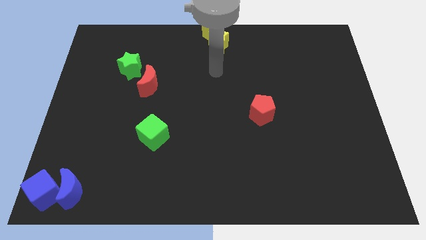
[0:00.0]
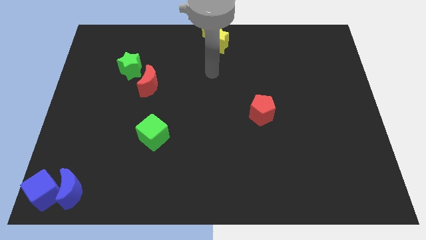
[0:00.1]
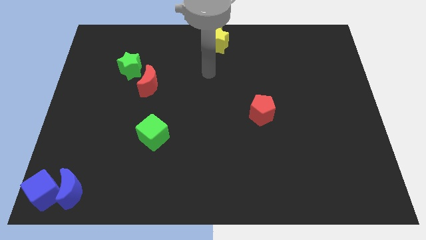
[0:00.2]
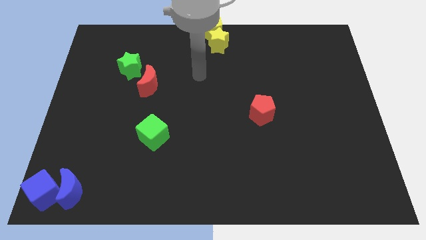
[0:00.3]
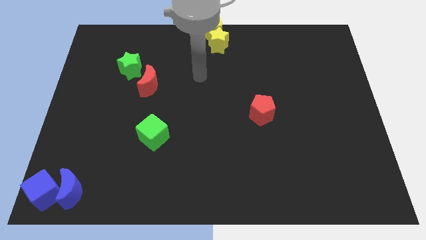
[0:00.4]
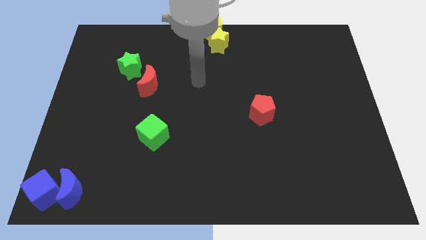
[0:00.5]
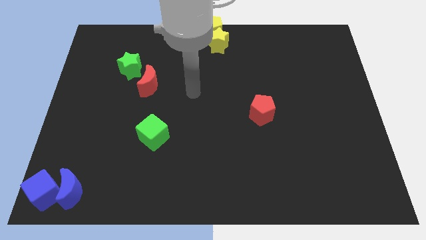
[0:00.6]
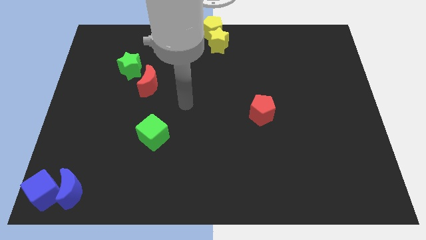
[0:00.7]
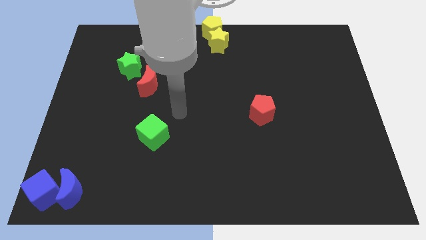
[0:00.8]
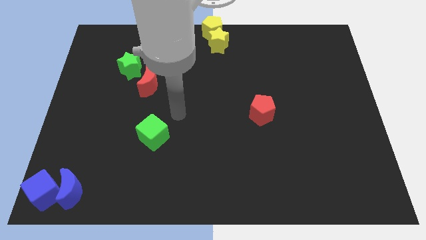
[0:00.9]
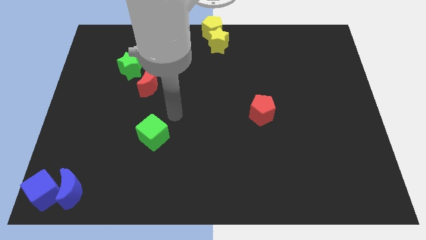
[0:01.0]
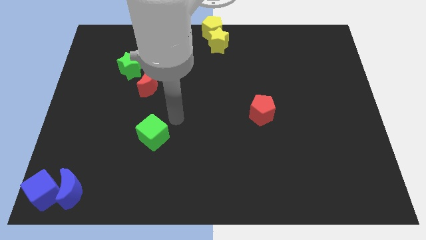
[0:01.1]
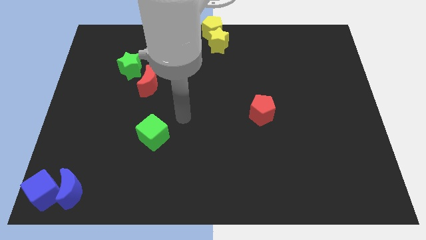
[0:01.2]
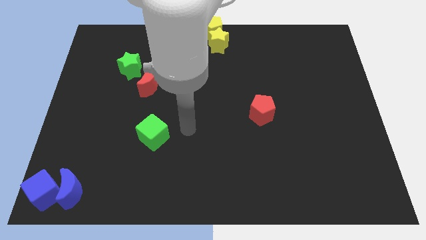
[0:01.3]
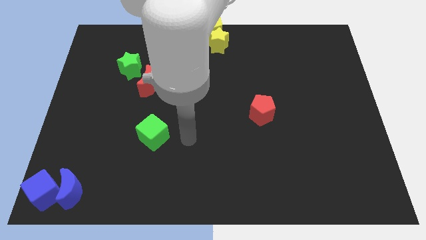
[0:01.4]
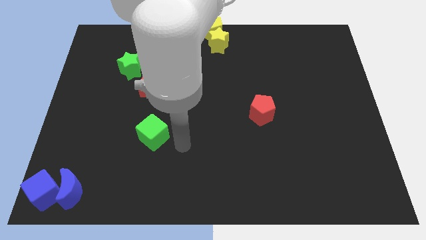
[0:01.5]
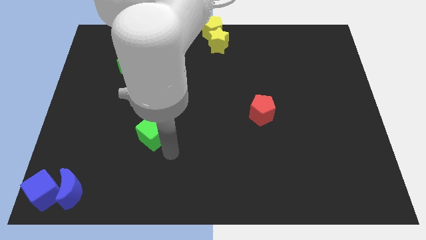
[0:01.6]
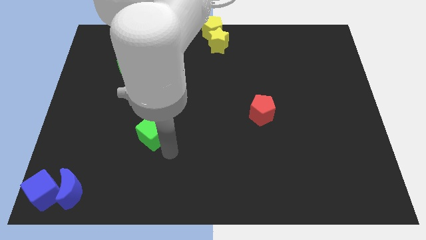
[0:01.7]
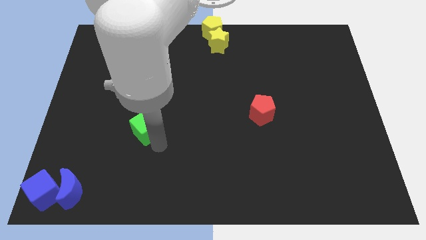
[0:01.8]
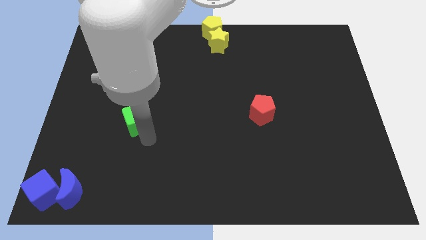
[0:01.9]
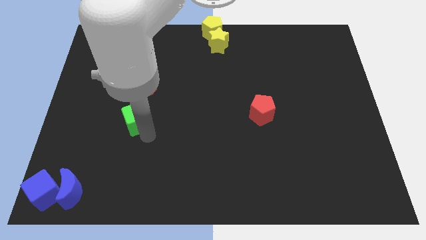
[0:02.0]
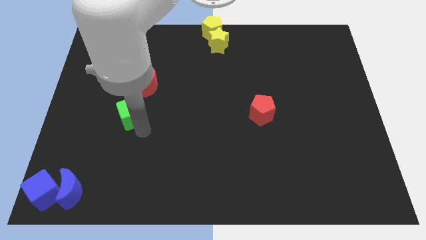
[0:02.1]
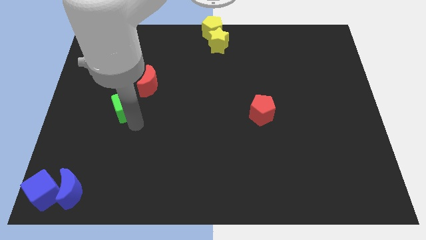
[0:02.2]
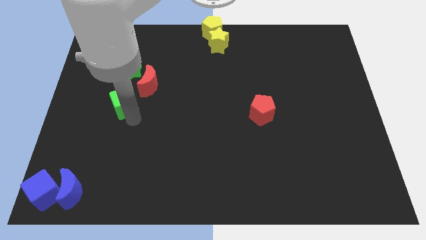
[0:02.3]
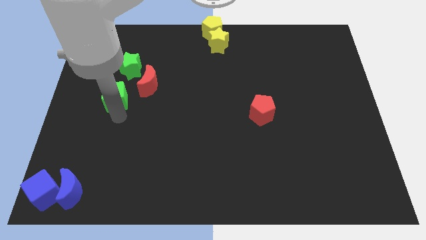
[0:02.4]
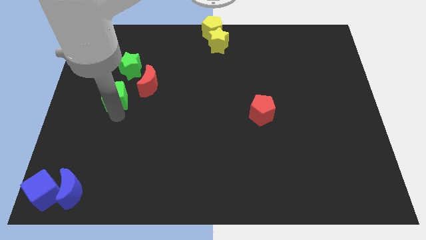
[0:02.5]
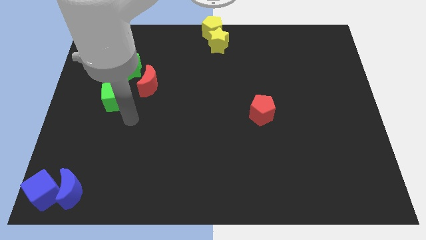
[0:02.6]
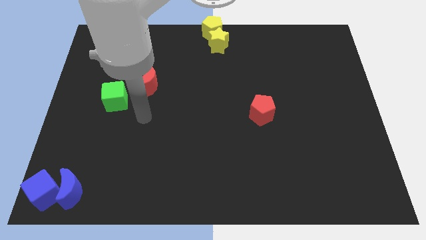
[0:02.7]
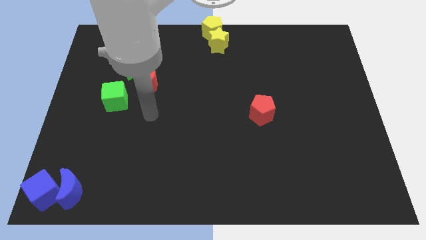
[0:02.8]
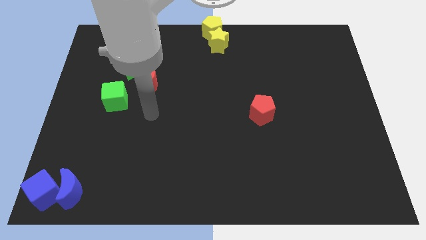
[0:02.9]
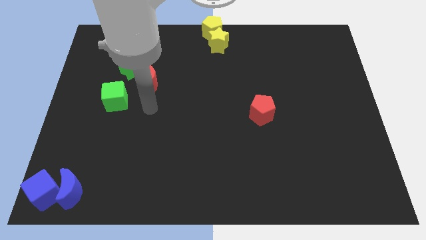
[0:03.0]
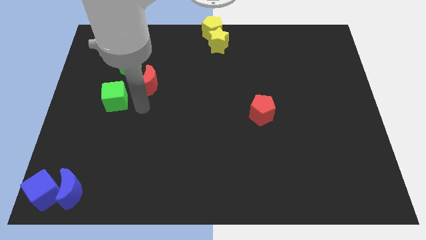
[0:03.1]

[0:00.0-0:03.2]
move green cube towards the green star

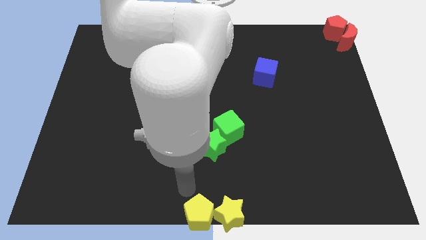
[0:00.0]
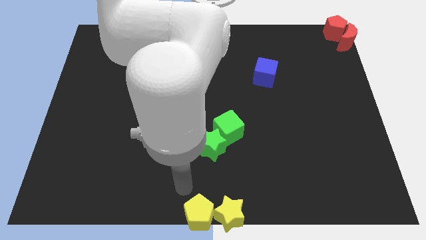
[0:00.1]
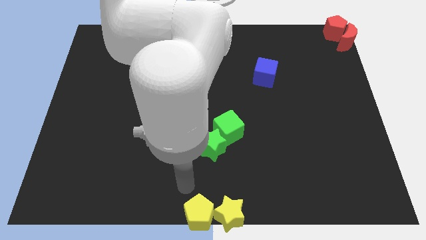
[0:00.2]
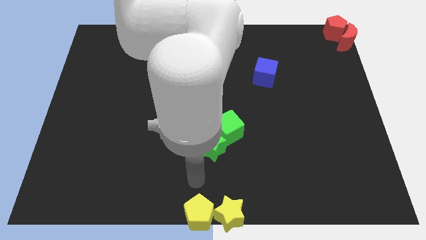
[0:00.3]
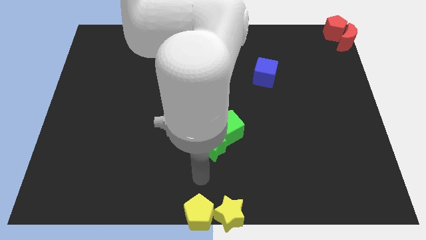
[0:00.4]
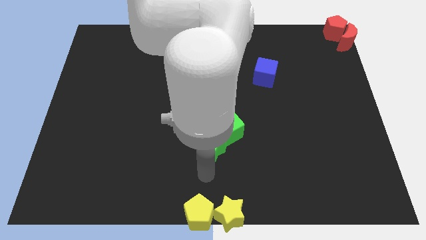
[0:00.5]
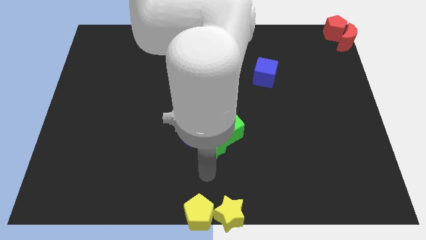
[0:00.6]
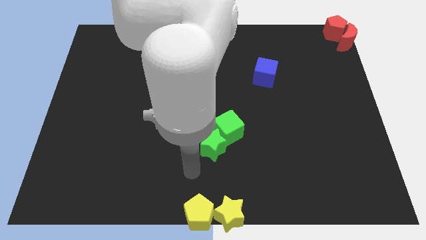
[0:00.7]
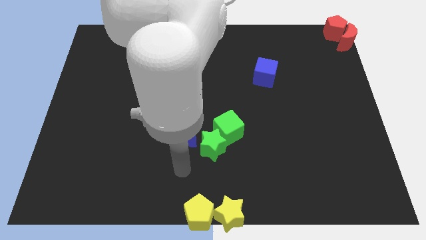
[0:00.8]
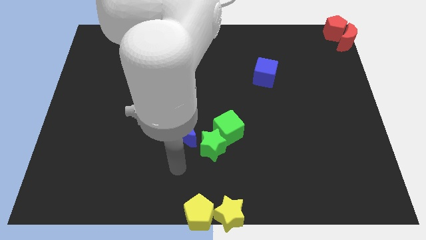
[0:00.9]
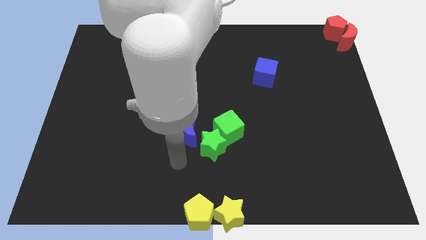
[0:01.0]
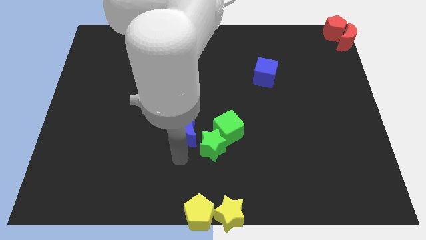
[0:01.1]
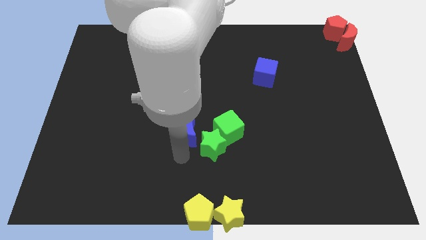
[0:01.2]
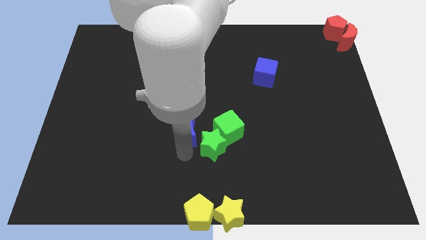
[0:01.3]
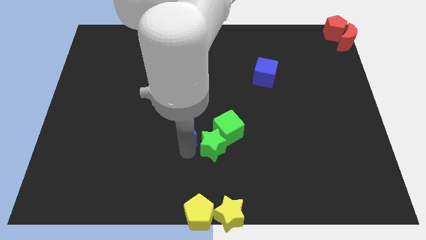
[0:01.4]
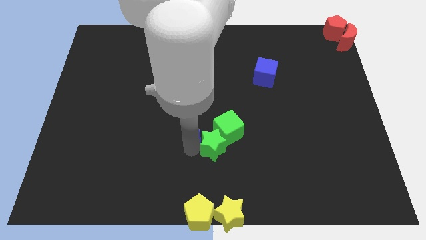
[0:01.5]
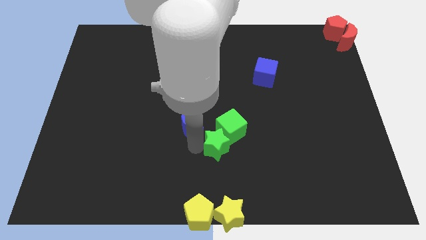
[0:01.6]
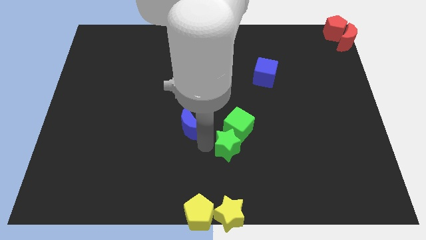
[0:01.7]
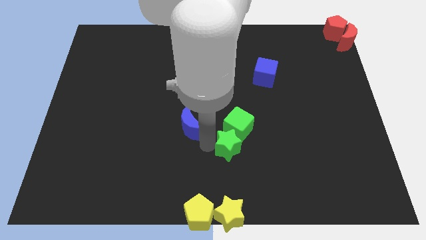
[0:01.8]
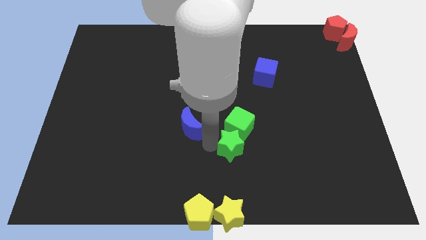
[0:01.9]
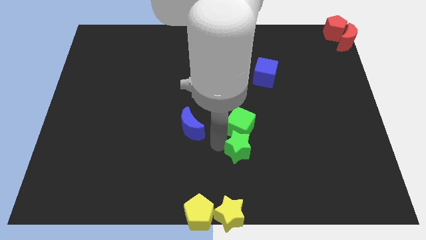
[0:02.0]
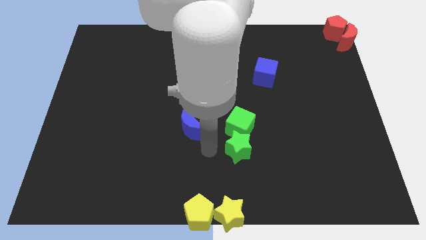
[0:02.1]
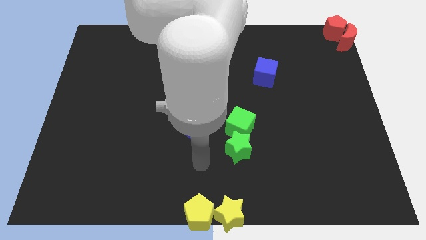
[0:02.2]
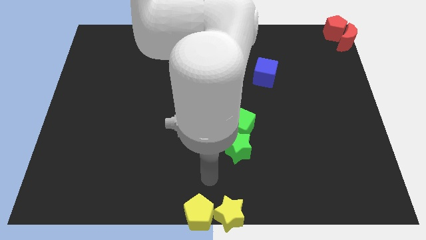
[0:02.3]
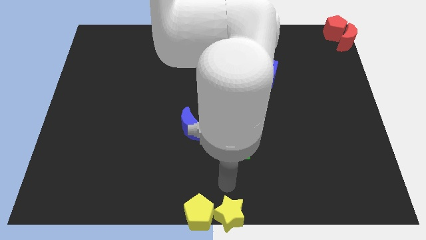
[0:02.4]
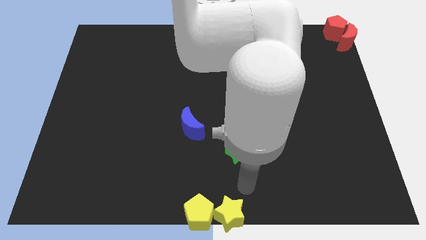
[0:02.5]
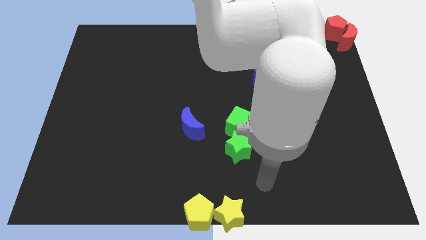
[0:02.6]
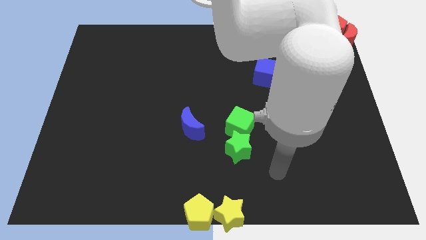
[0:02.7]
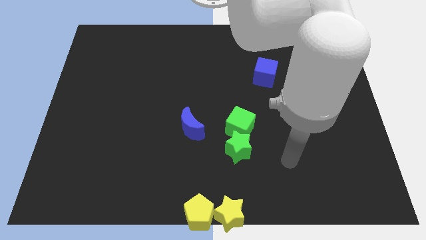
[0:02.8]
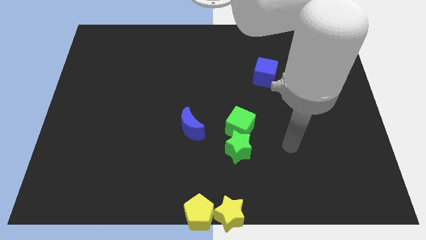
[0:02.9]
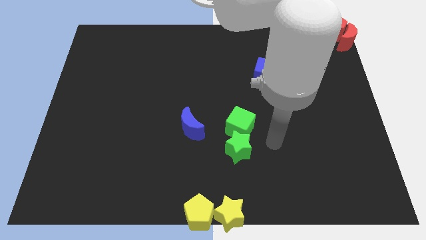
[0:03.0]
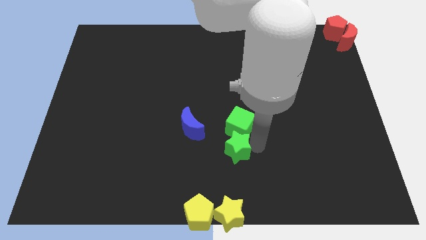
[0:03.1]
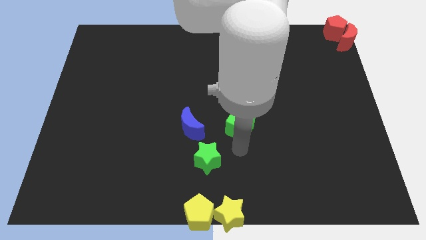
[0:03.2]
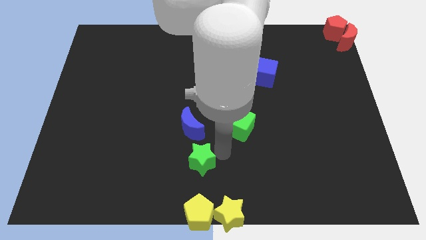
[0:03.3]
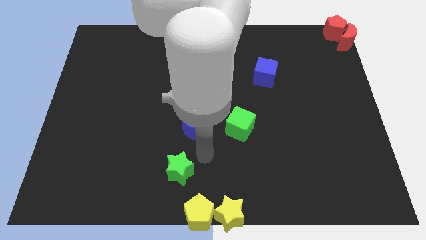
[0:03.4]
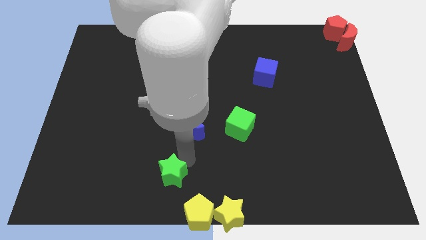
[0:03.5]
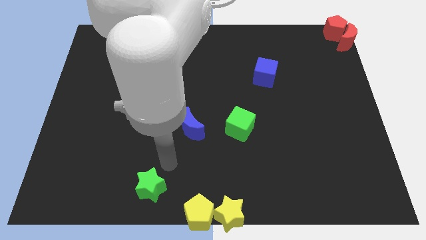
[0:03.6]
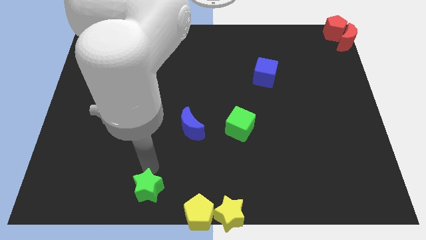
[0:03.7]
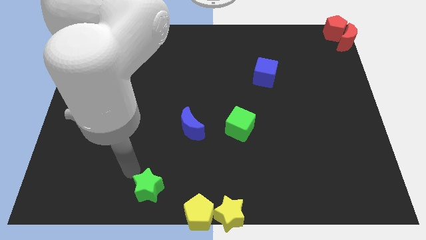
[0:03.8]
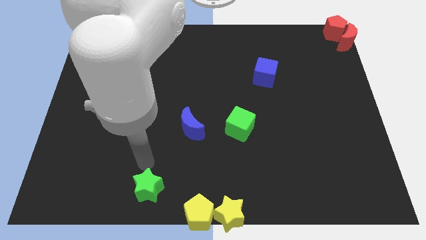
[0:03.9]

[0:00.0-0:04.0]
separate green star from the green cube

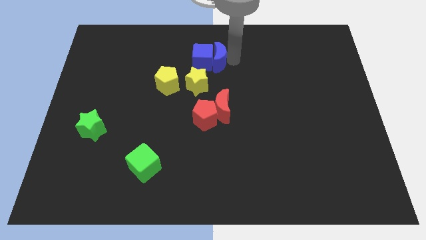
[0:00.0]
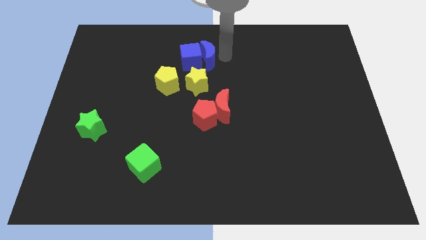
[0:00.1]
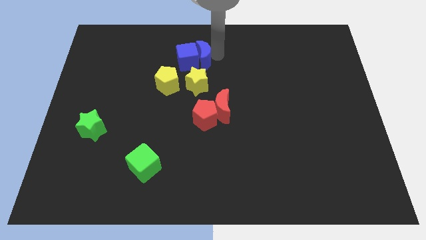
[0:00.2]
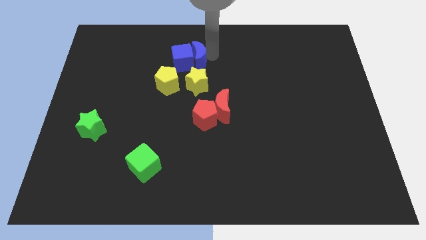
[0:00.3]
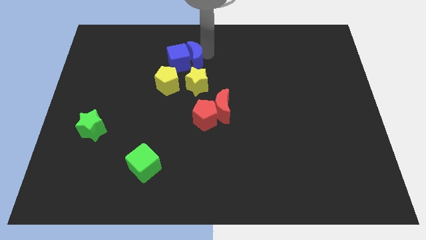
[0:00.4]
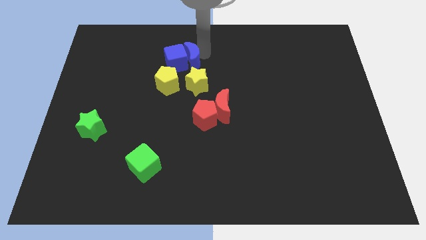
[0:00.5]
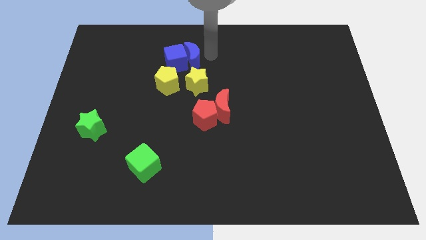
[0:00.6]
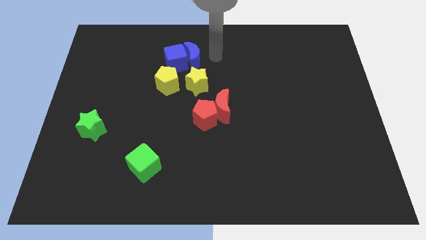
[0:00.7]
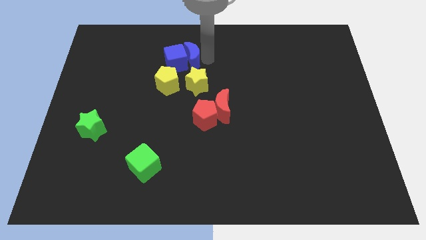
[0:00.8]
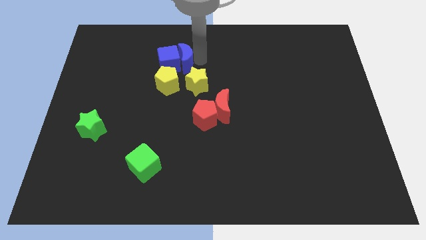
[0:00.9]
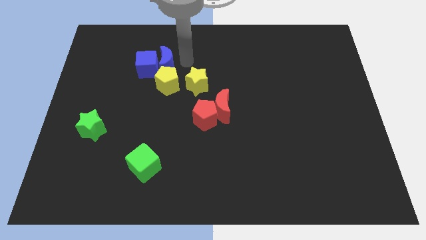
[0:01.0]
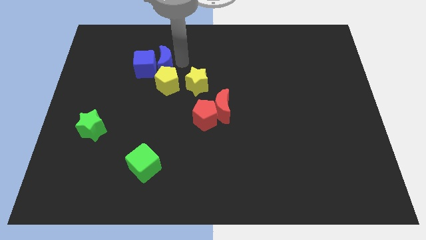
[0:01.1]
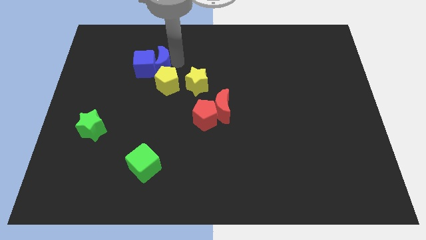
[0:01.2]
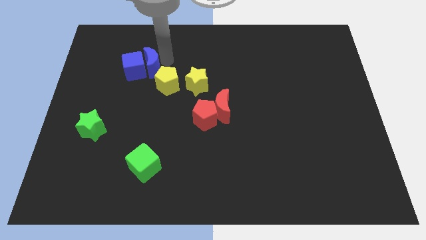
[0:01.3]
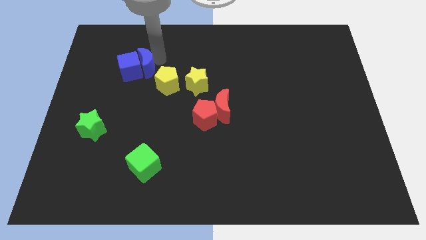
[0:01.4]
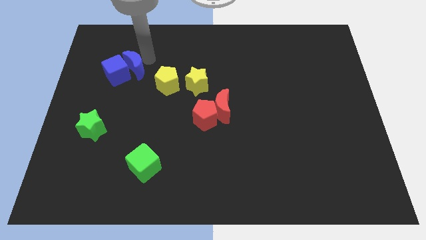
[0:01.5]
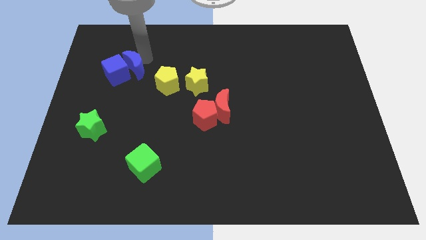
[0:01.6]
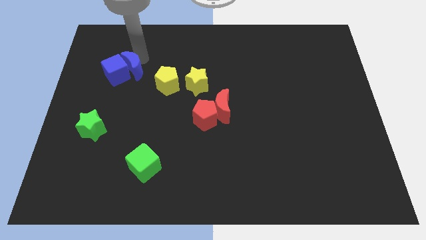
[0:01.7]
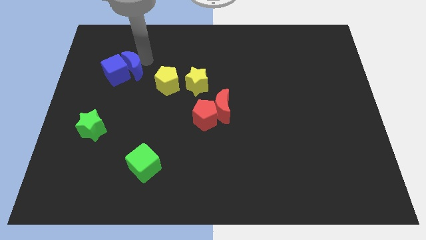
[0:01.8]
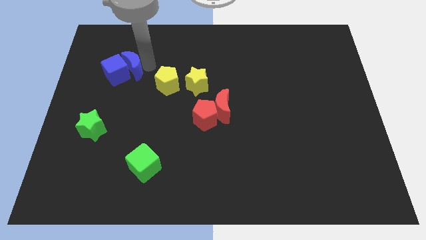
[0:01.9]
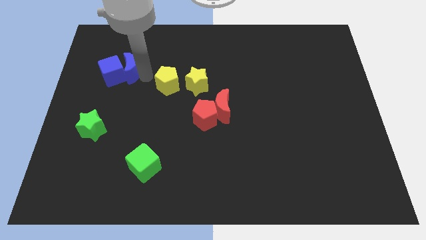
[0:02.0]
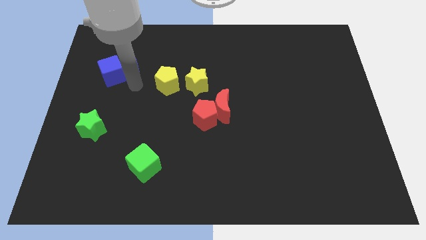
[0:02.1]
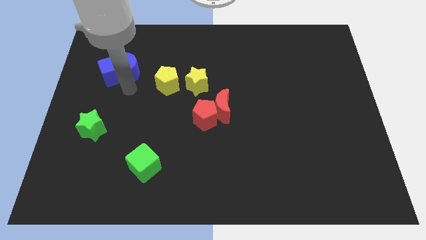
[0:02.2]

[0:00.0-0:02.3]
move the blue blocks left to the yellow blocks
